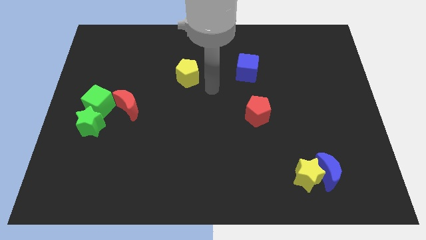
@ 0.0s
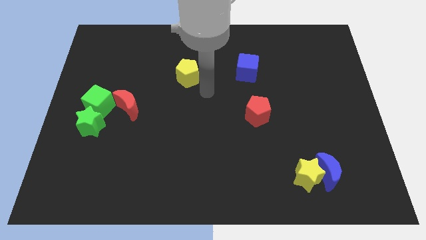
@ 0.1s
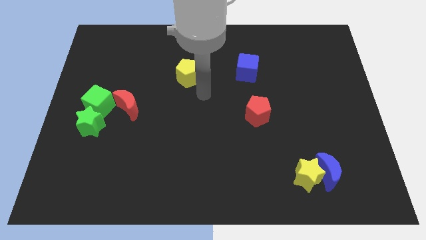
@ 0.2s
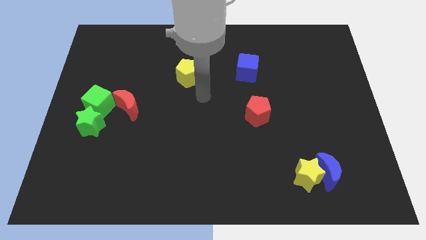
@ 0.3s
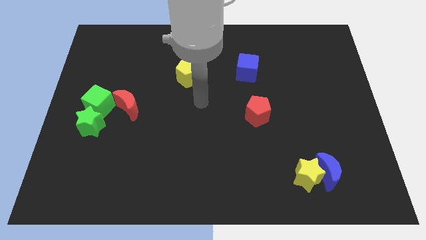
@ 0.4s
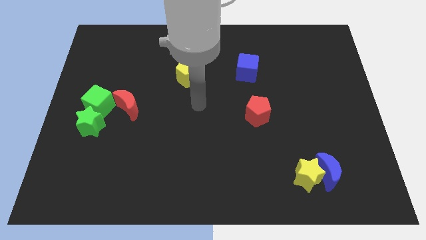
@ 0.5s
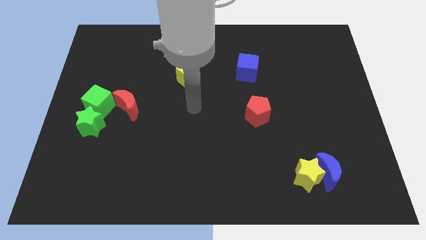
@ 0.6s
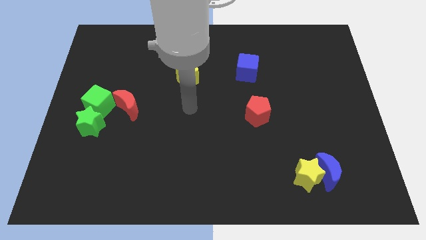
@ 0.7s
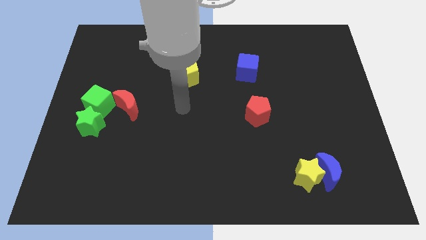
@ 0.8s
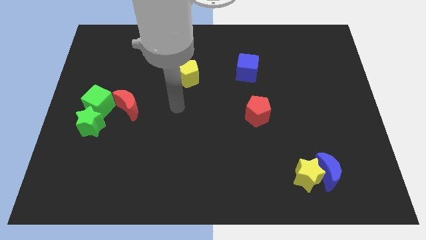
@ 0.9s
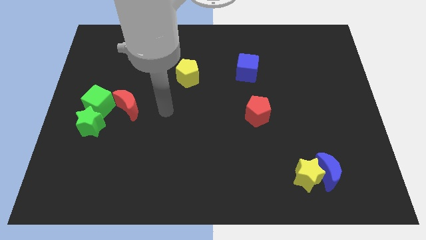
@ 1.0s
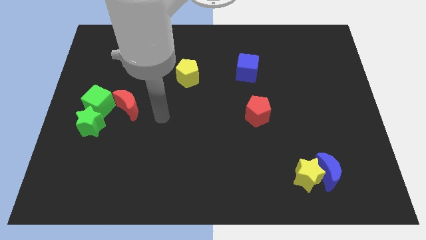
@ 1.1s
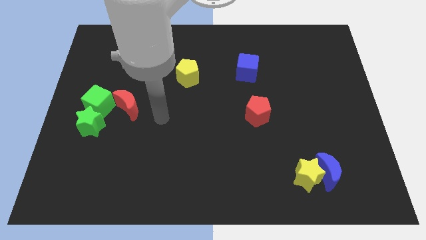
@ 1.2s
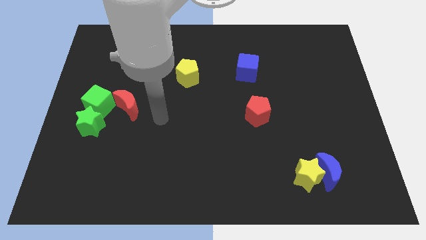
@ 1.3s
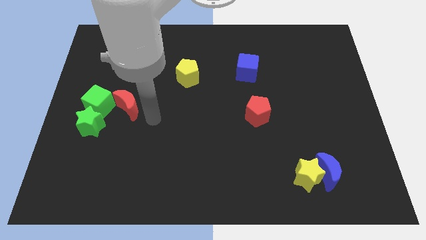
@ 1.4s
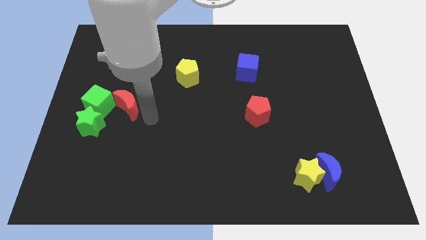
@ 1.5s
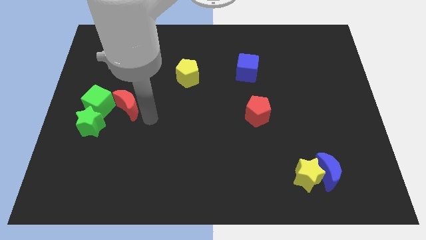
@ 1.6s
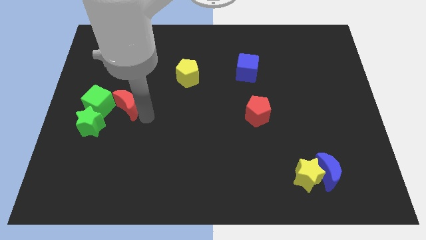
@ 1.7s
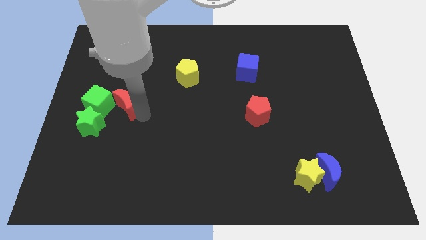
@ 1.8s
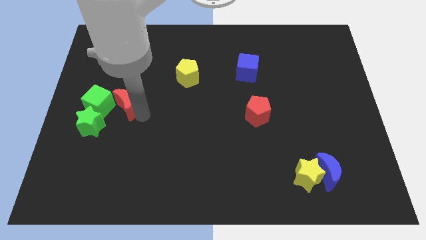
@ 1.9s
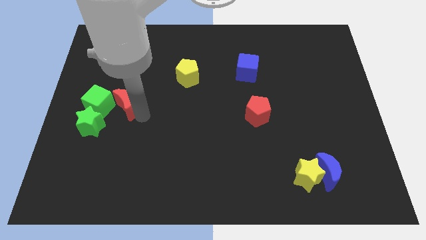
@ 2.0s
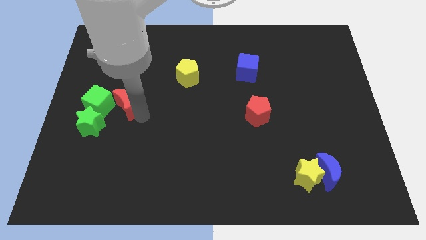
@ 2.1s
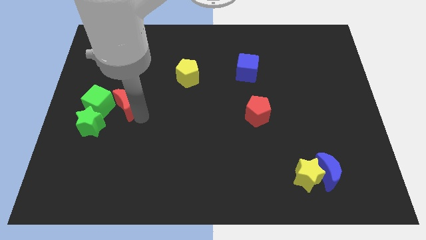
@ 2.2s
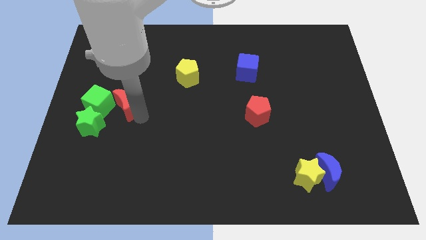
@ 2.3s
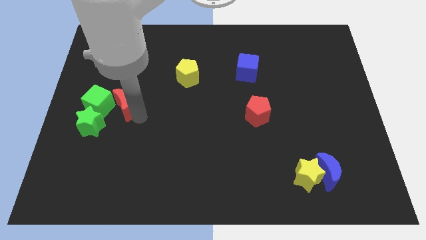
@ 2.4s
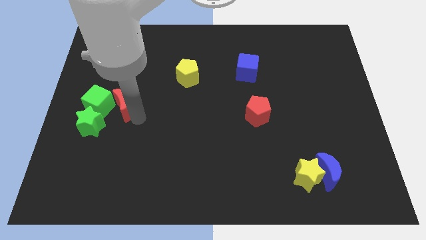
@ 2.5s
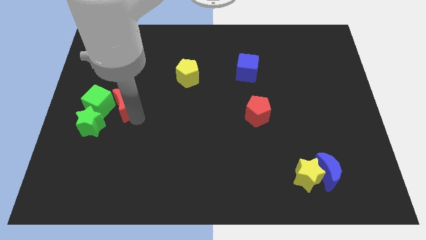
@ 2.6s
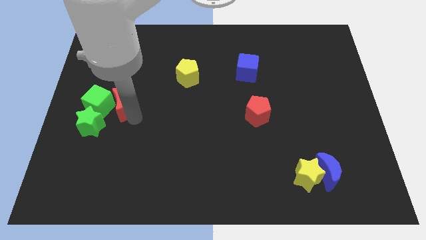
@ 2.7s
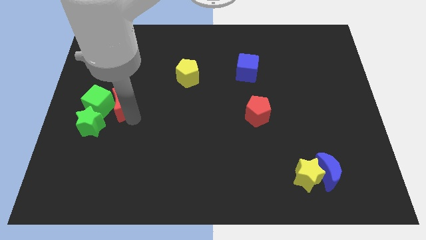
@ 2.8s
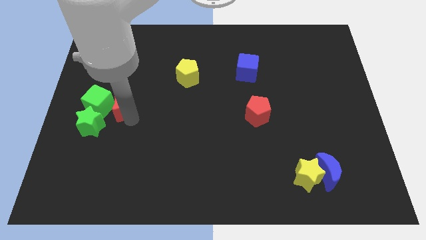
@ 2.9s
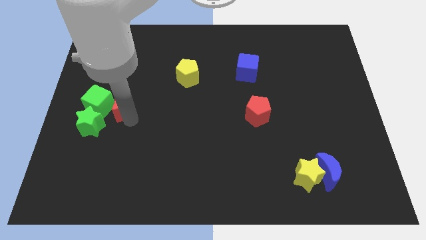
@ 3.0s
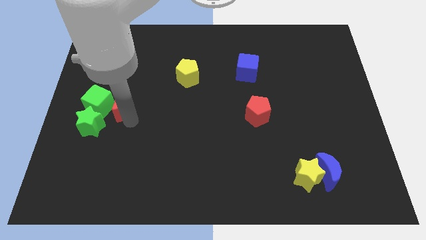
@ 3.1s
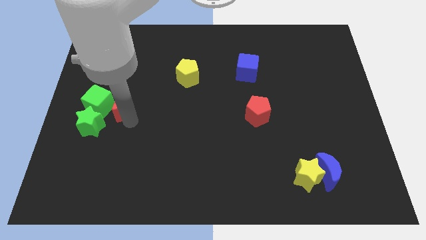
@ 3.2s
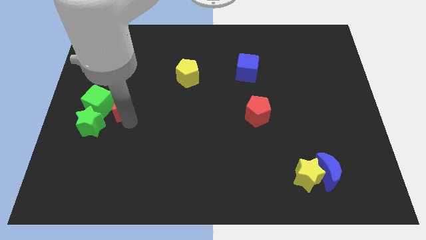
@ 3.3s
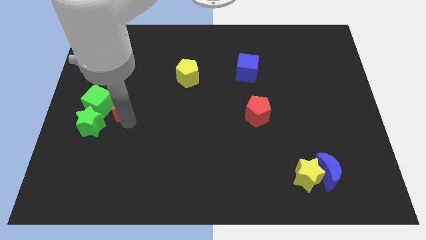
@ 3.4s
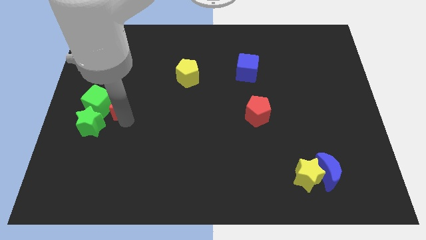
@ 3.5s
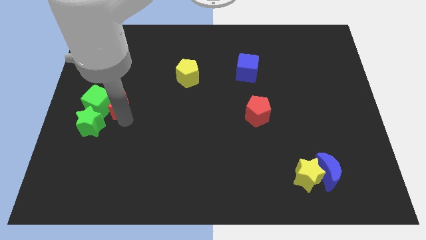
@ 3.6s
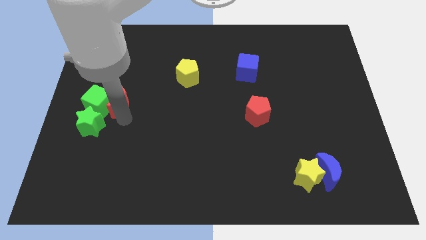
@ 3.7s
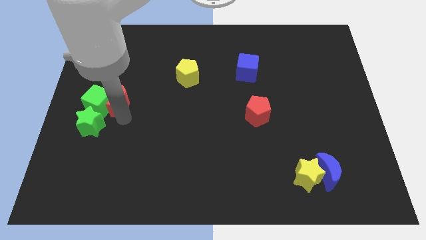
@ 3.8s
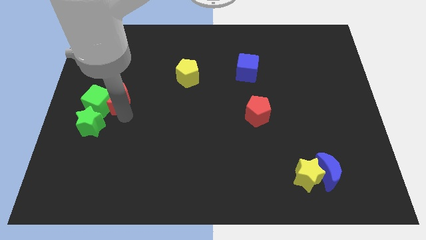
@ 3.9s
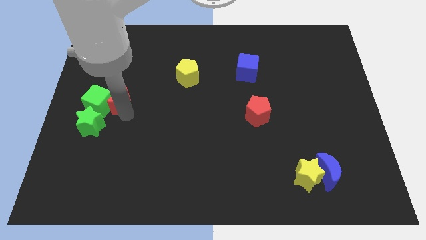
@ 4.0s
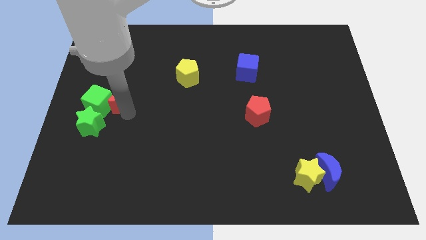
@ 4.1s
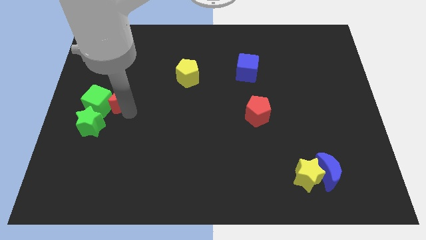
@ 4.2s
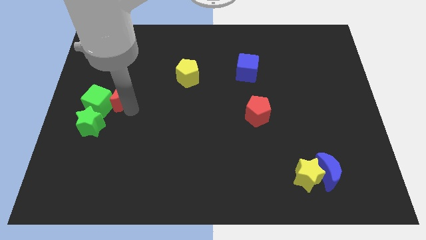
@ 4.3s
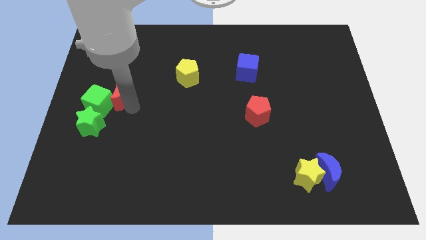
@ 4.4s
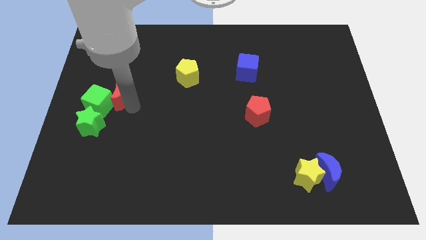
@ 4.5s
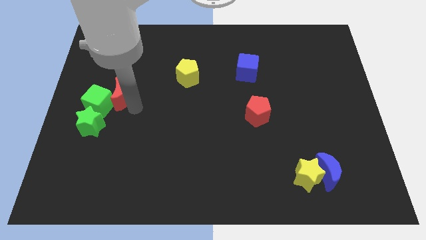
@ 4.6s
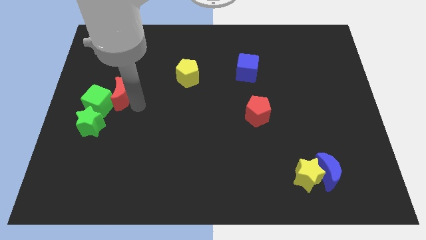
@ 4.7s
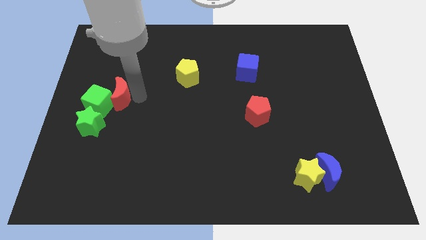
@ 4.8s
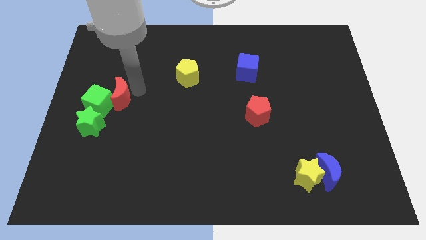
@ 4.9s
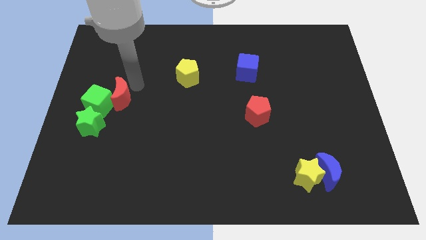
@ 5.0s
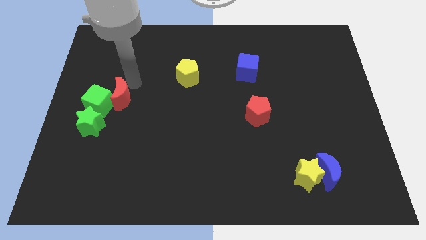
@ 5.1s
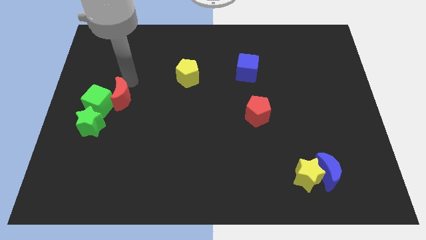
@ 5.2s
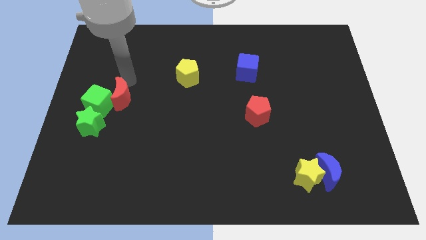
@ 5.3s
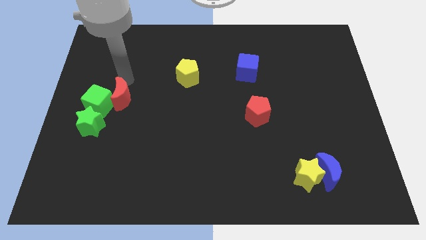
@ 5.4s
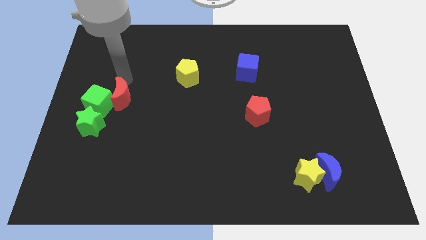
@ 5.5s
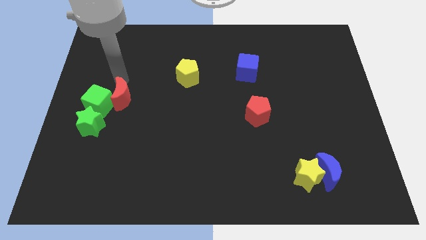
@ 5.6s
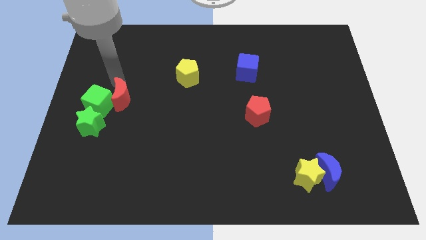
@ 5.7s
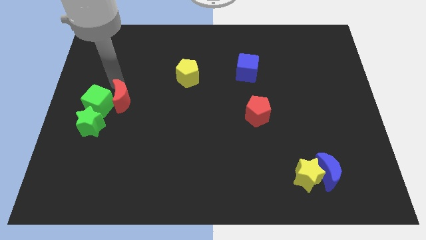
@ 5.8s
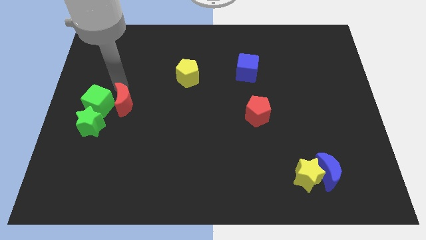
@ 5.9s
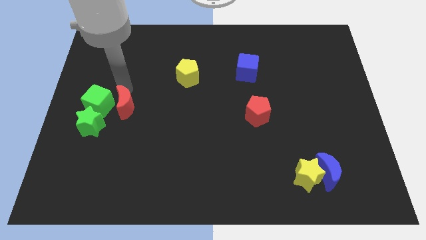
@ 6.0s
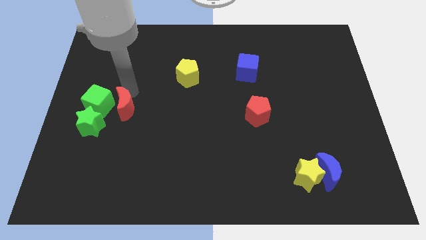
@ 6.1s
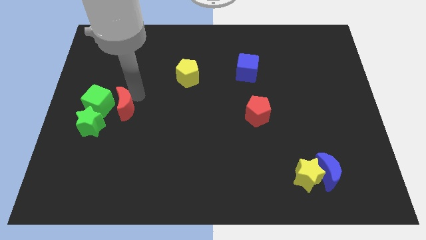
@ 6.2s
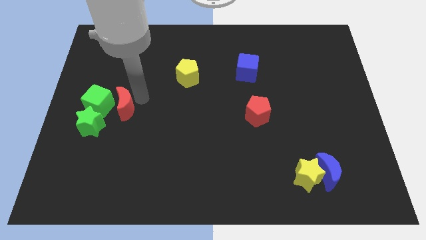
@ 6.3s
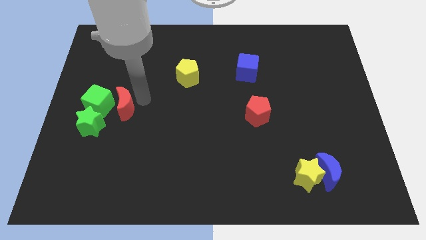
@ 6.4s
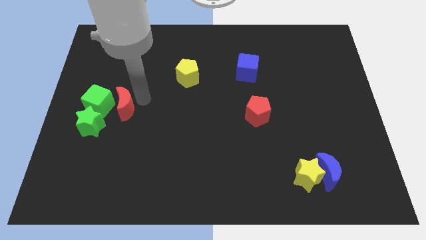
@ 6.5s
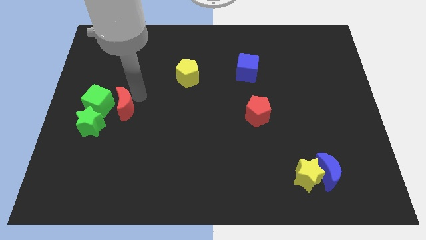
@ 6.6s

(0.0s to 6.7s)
push the red crescent to the right of the green cube

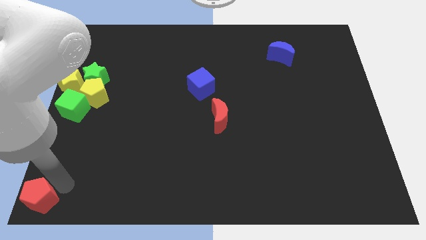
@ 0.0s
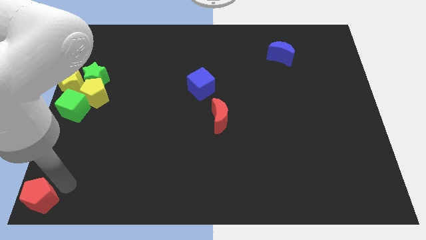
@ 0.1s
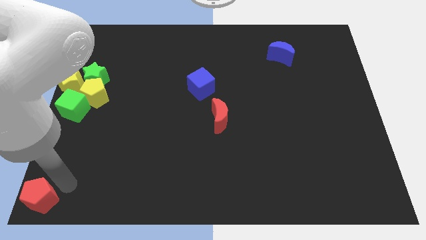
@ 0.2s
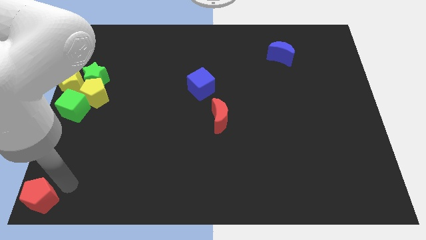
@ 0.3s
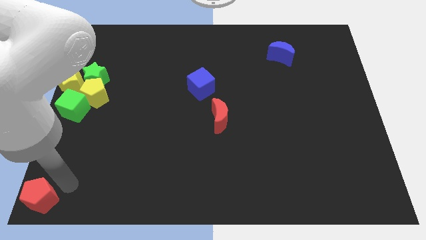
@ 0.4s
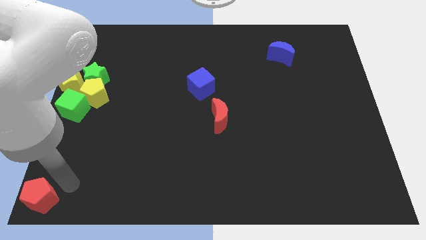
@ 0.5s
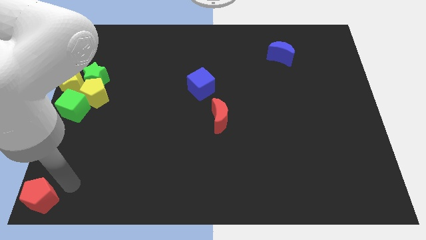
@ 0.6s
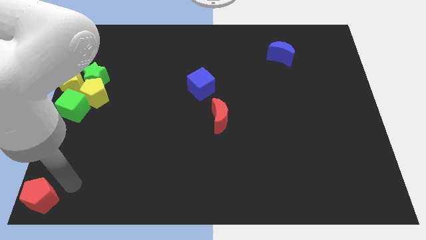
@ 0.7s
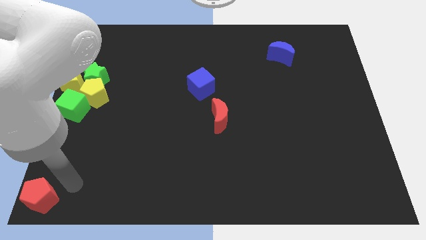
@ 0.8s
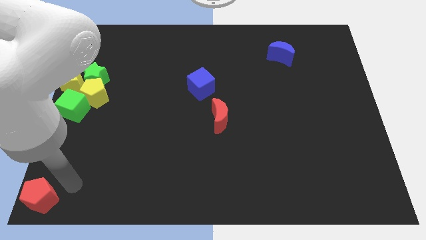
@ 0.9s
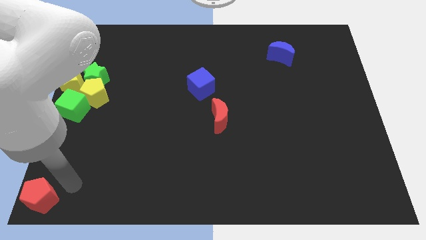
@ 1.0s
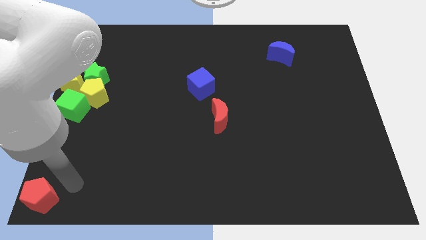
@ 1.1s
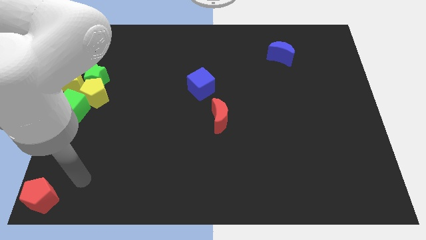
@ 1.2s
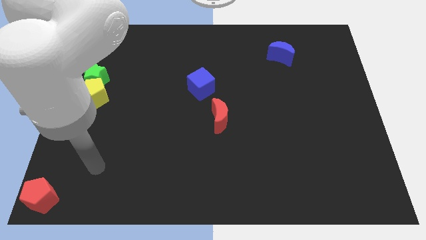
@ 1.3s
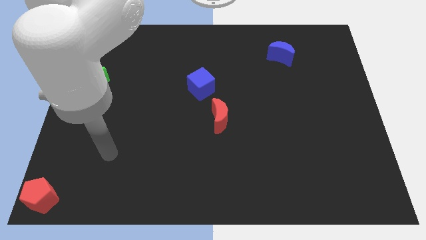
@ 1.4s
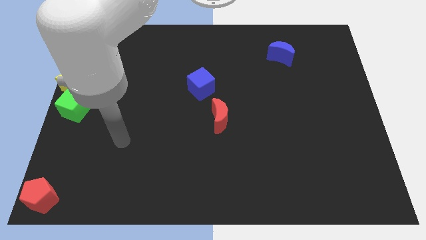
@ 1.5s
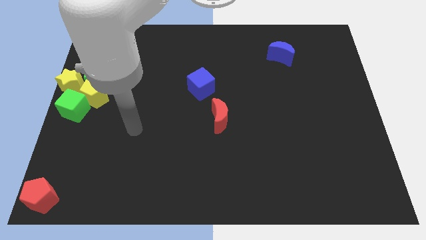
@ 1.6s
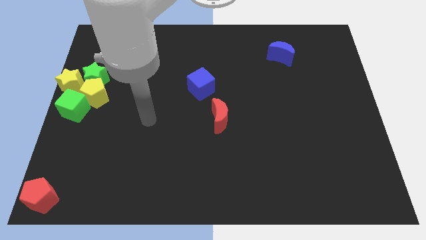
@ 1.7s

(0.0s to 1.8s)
move your arm away from the red pentagon

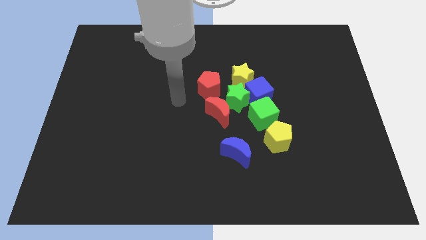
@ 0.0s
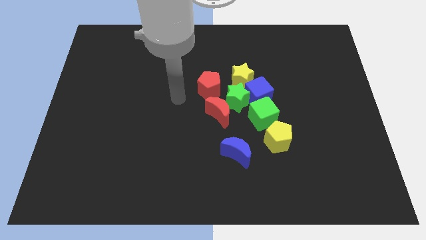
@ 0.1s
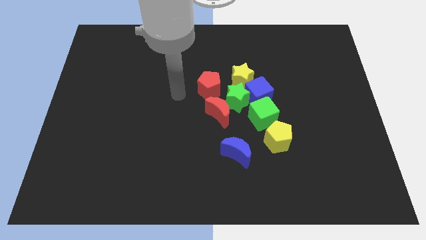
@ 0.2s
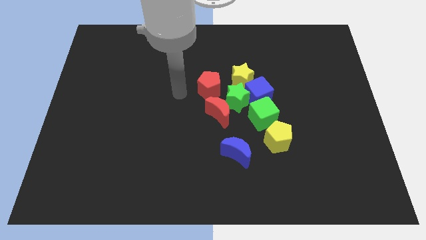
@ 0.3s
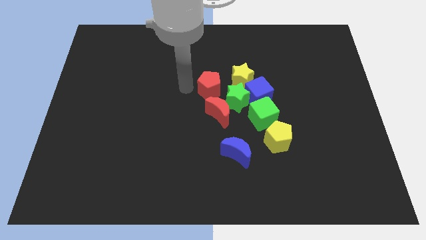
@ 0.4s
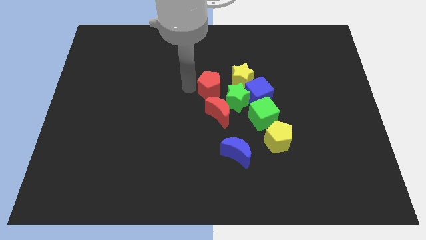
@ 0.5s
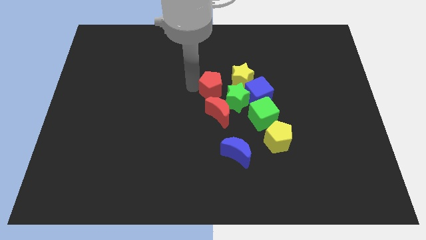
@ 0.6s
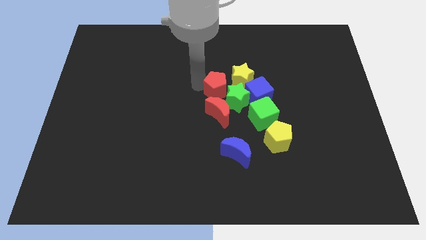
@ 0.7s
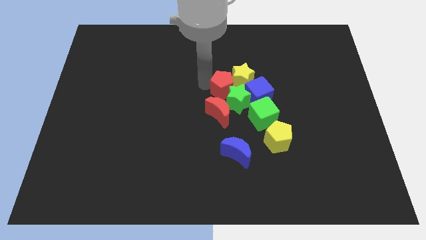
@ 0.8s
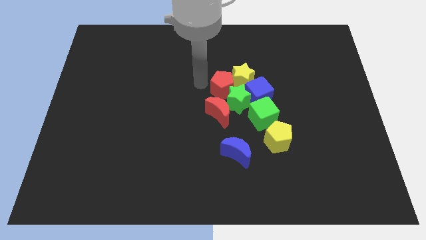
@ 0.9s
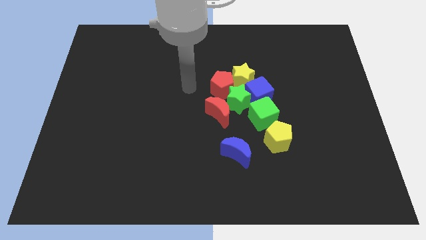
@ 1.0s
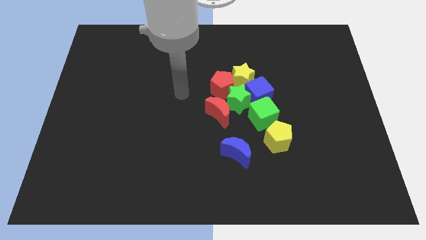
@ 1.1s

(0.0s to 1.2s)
move red pentagon into green star
